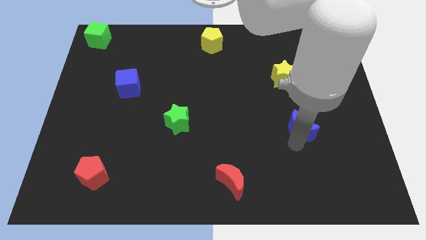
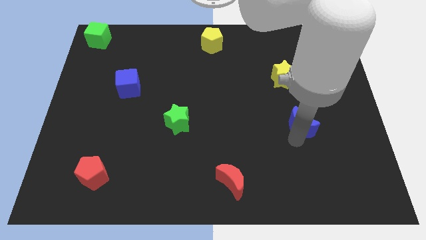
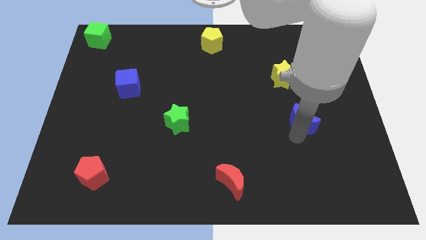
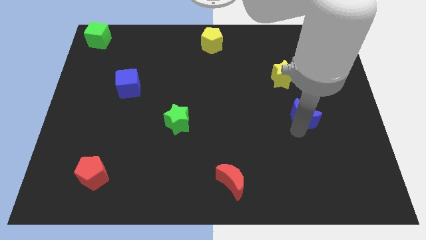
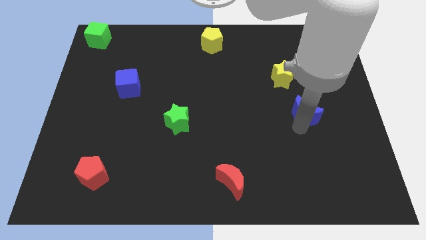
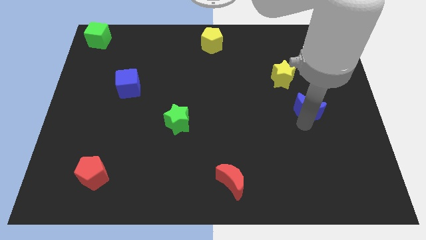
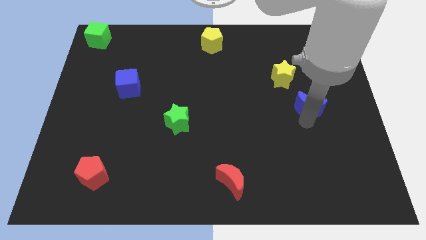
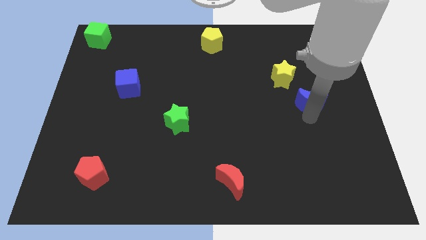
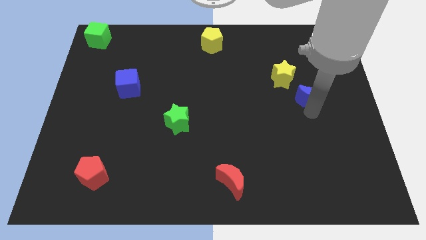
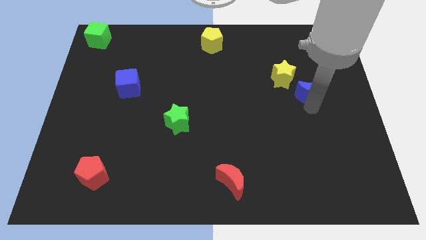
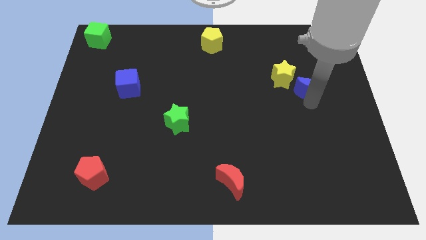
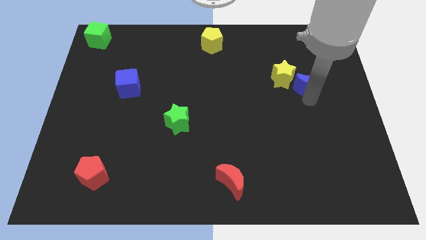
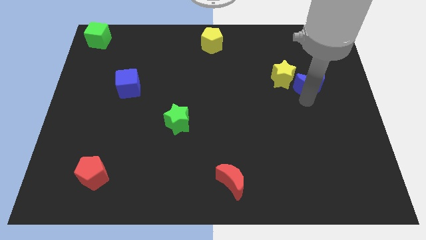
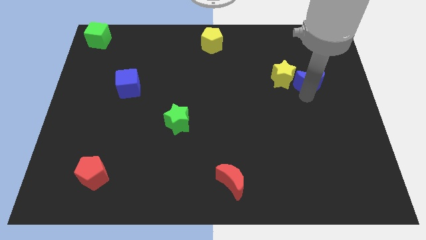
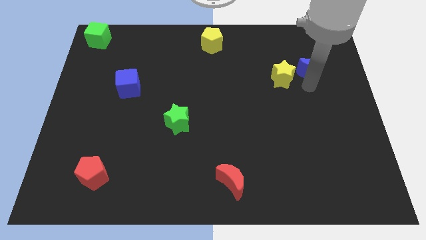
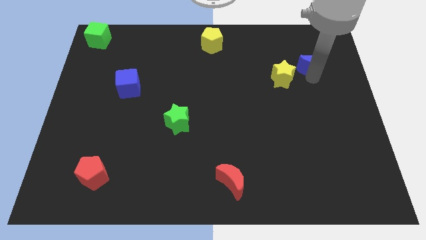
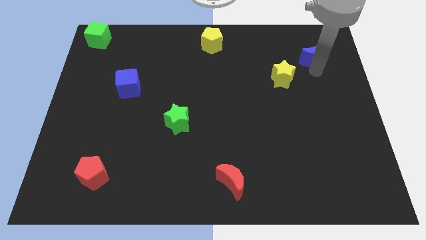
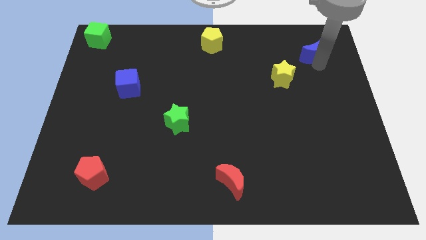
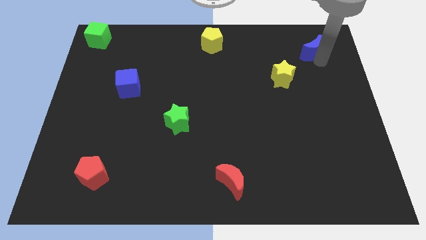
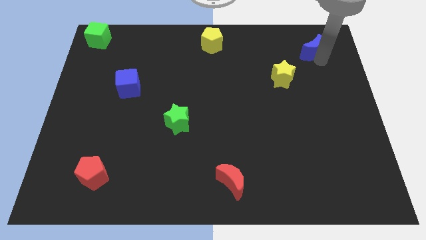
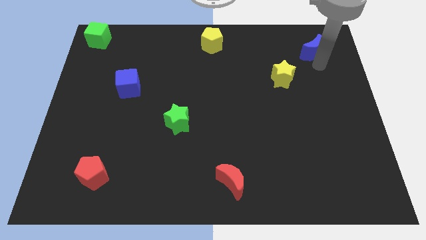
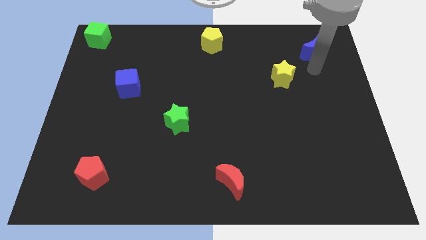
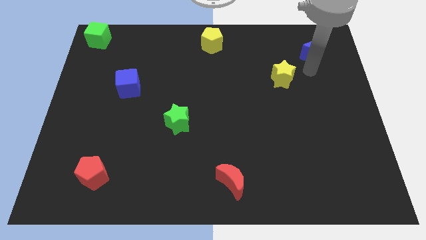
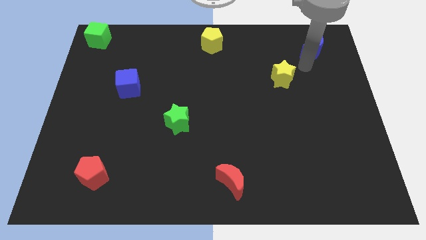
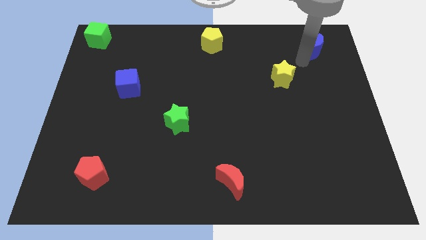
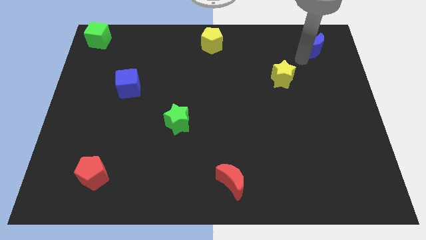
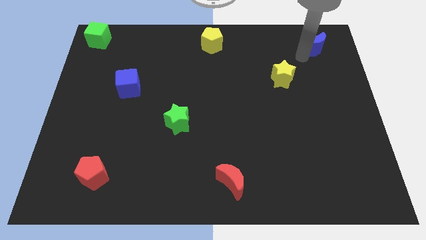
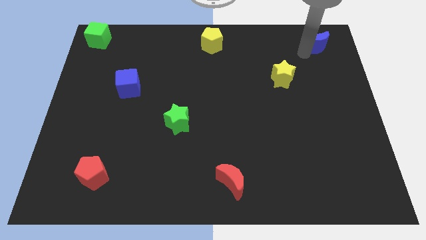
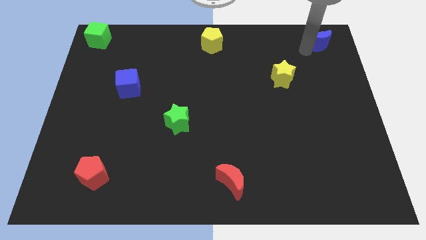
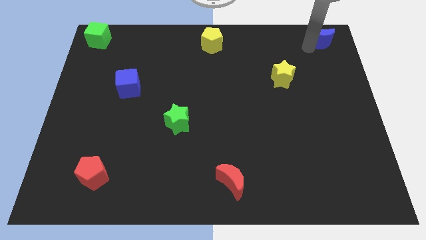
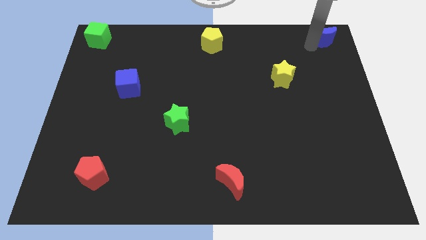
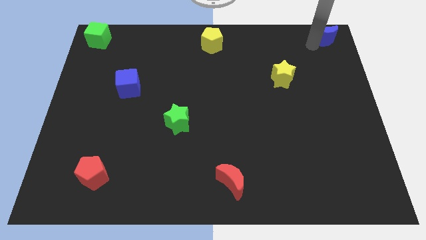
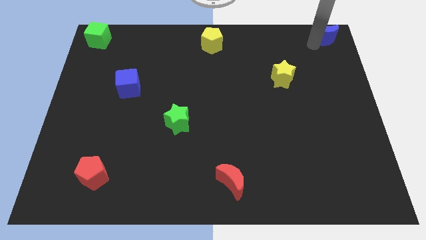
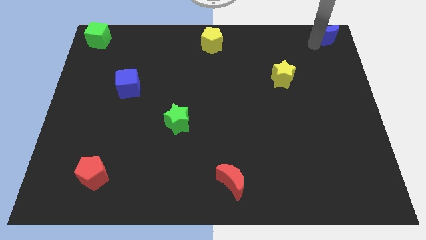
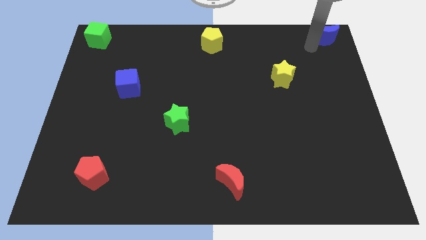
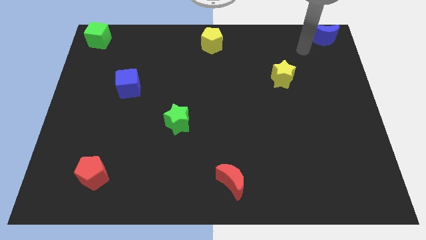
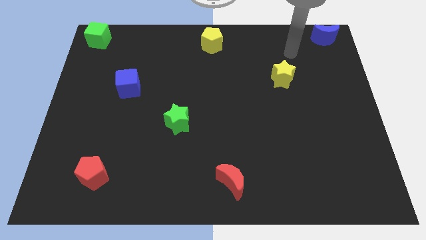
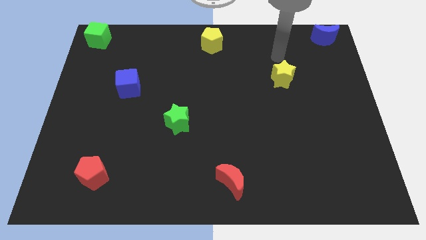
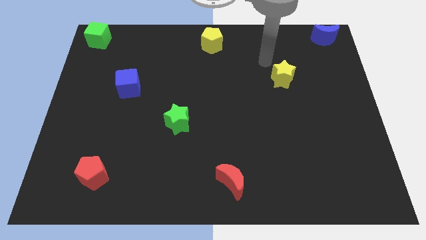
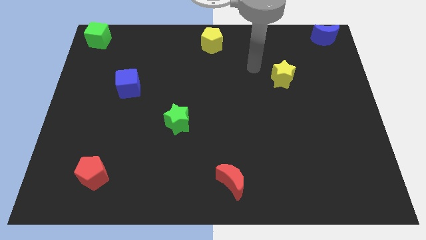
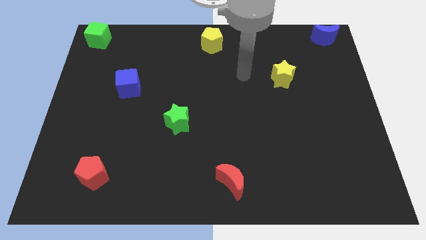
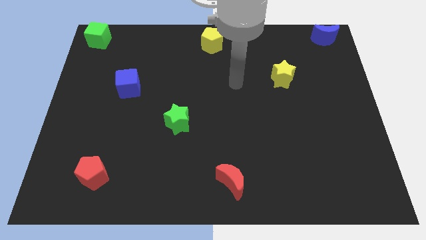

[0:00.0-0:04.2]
move blue moon to the top right corner

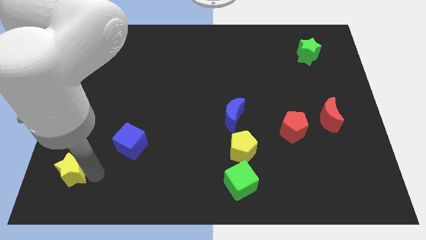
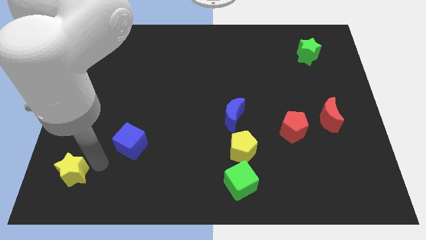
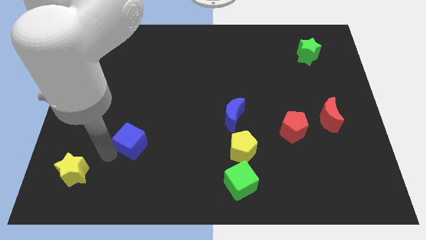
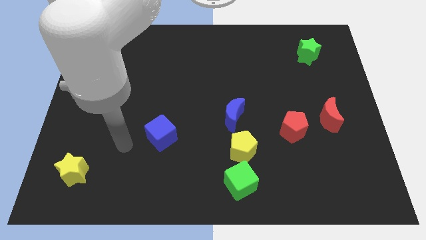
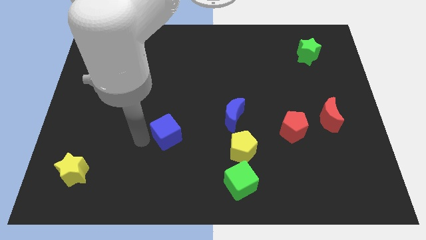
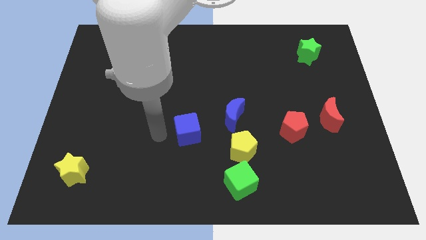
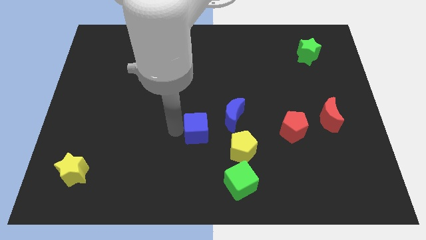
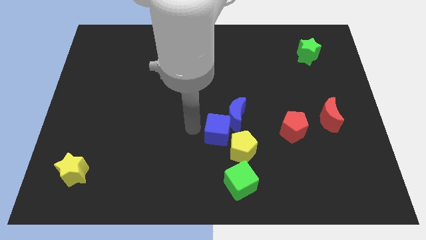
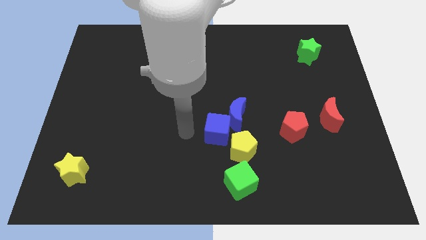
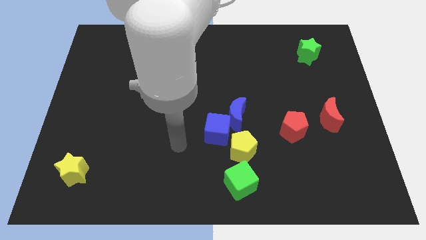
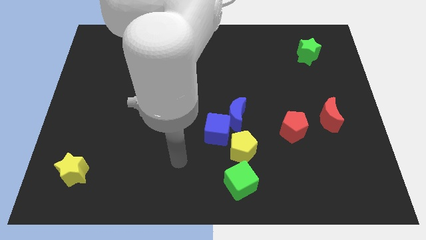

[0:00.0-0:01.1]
slide the blue cube into the left side of the blue moon

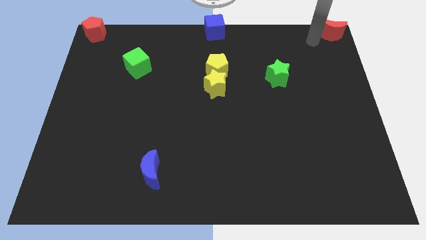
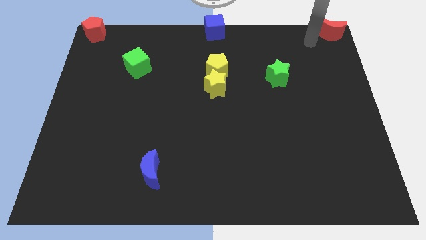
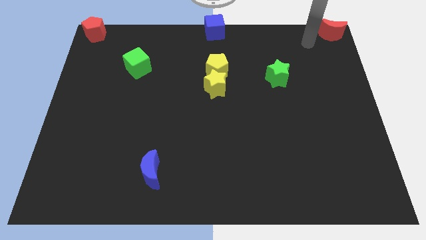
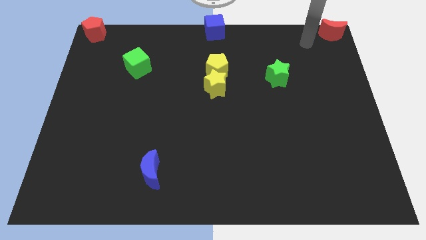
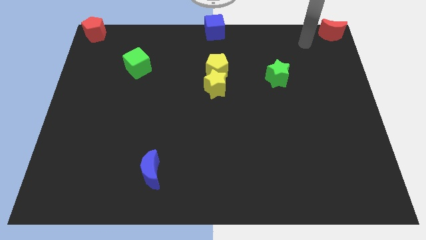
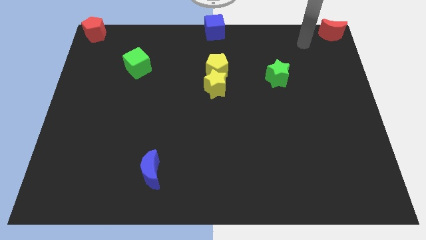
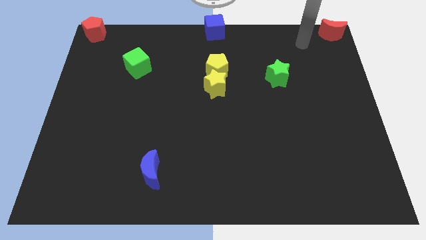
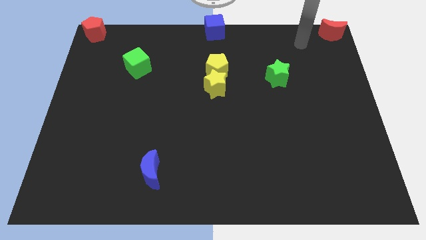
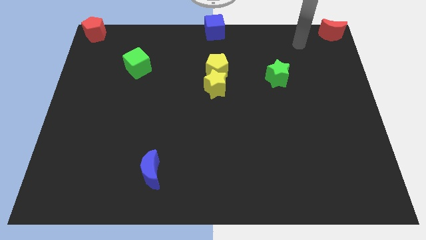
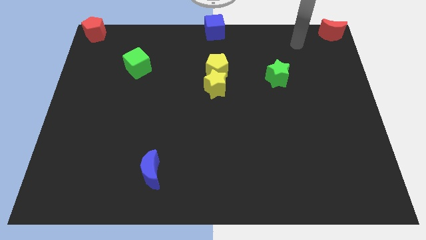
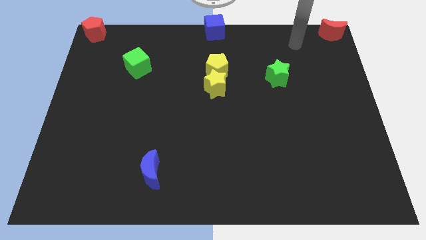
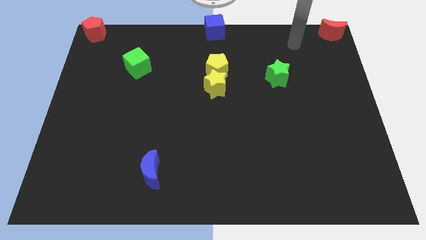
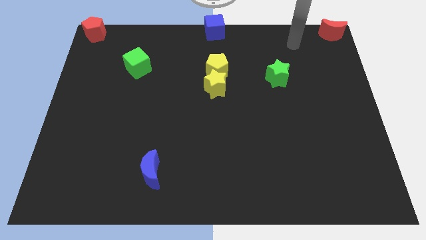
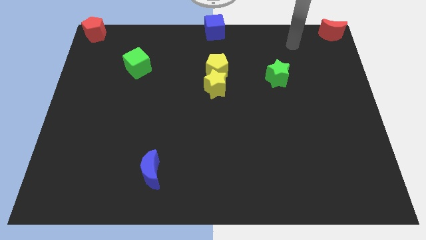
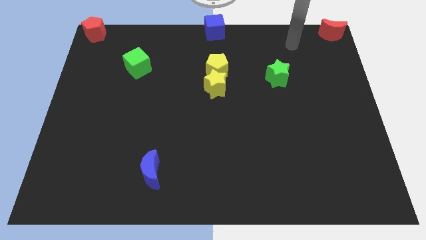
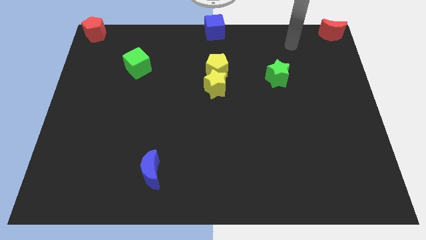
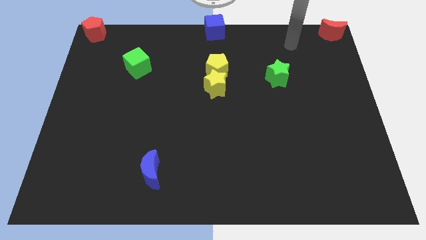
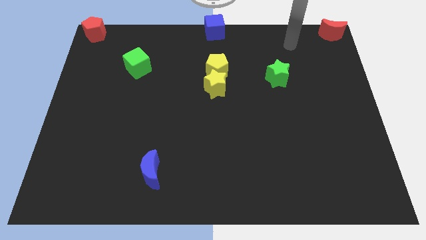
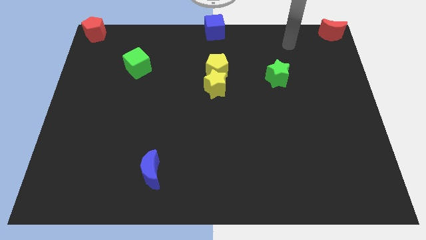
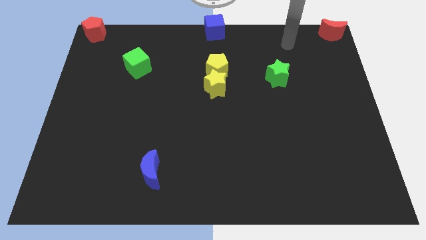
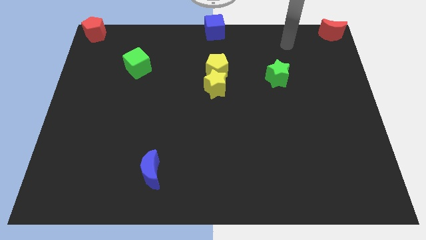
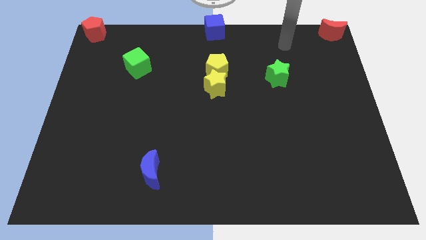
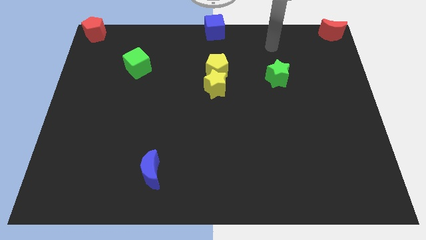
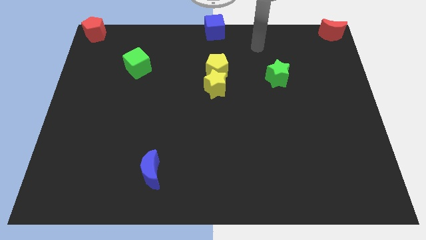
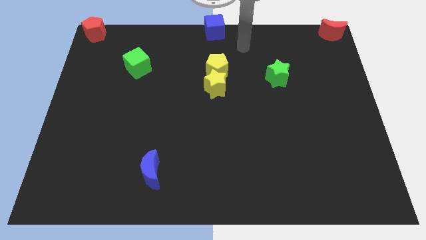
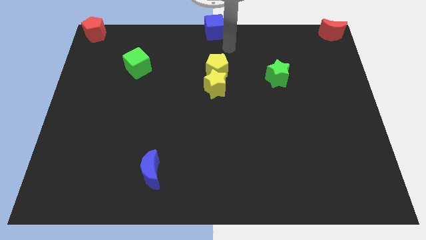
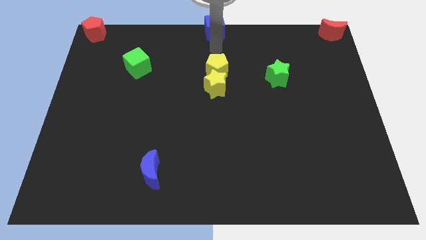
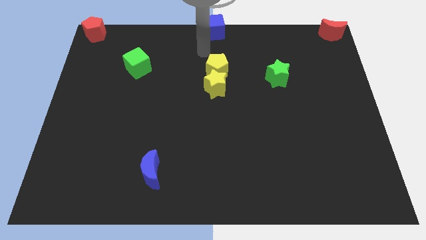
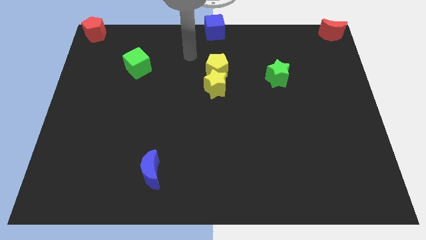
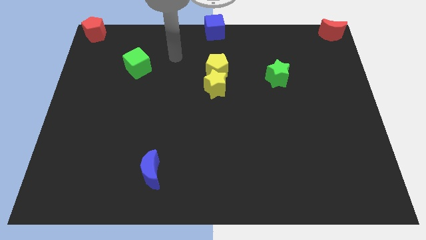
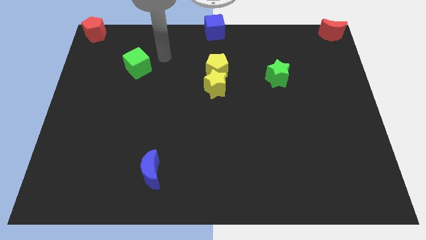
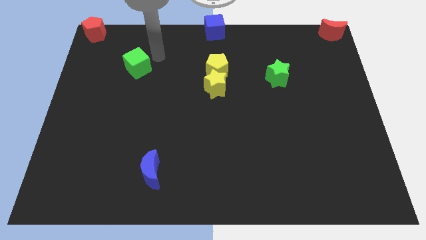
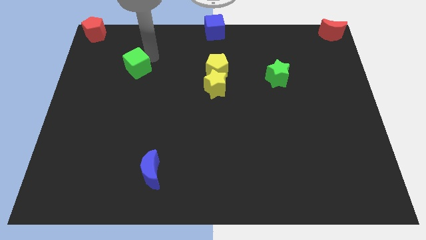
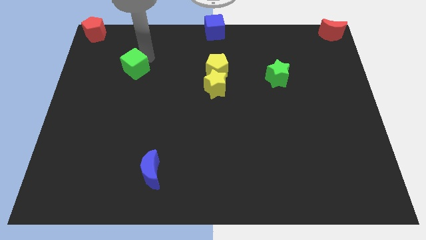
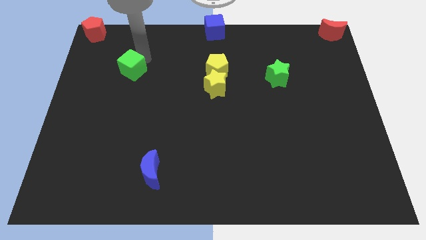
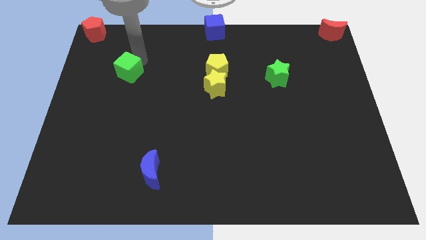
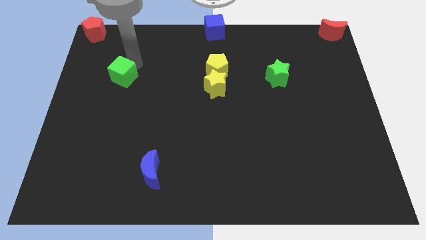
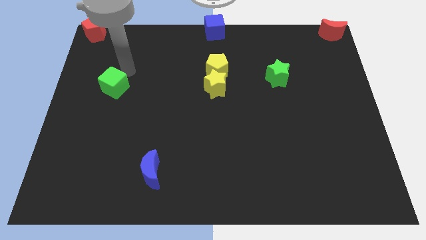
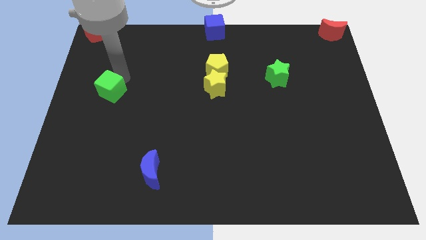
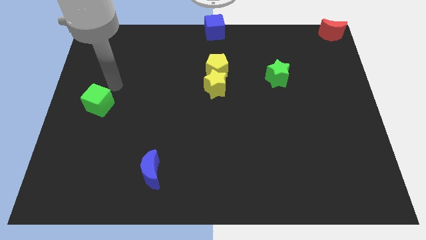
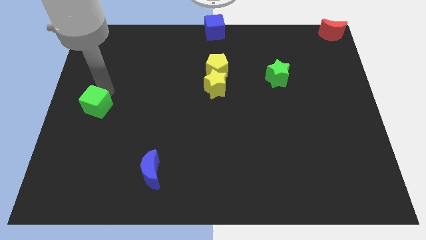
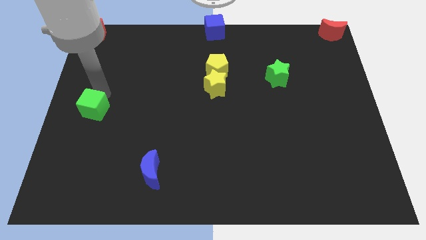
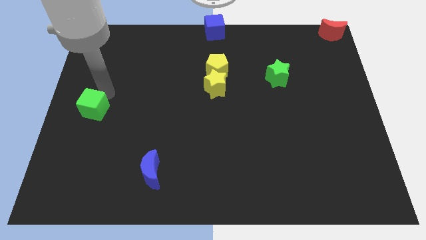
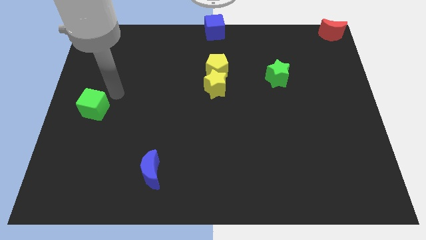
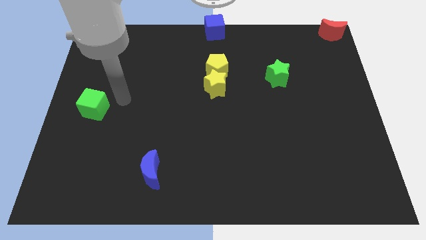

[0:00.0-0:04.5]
push the green cube to the left center of teh board
